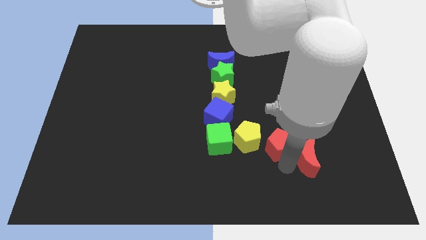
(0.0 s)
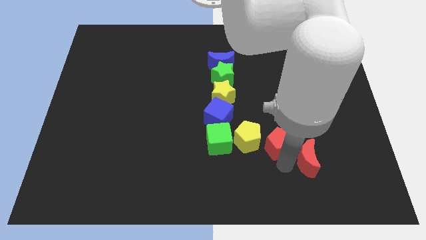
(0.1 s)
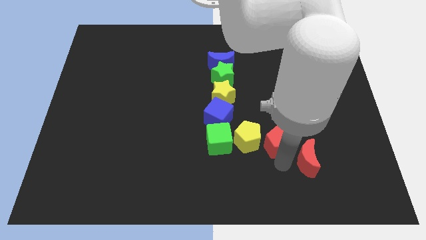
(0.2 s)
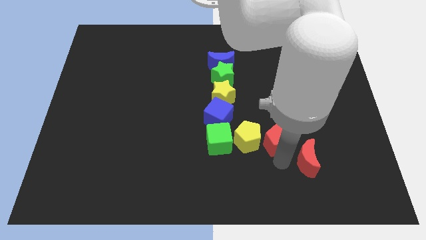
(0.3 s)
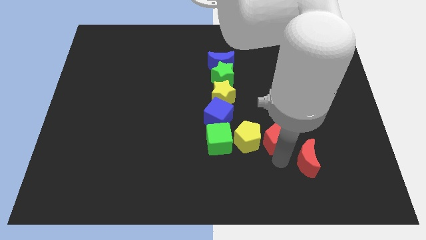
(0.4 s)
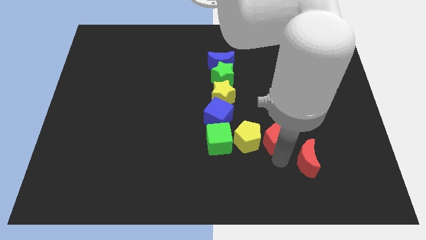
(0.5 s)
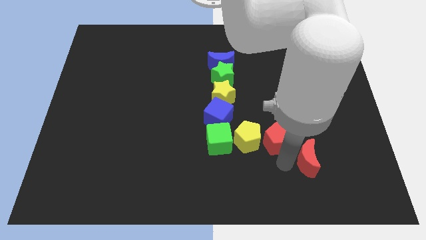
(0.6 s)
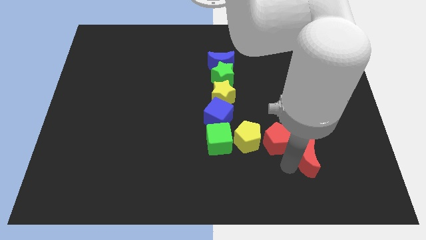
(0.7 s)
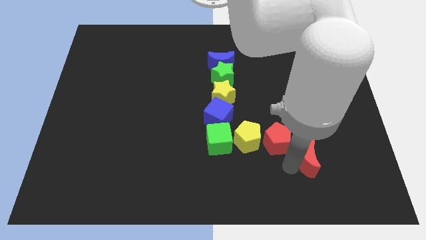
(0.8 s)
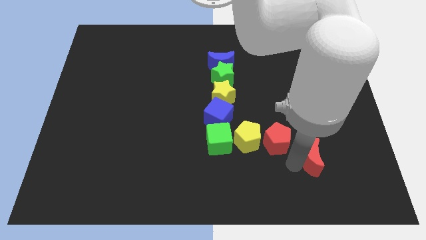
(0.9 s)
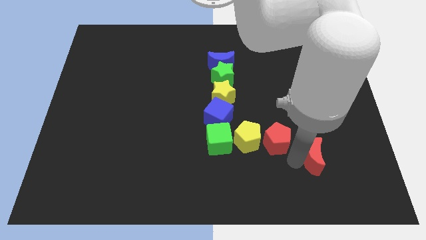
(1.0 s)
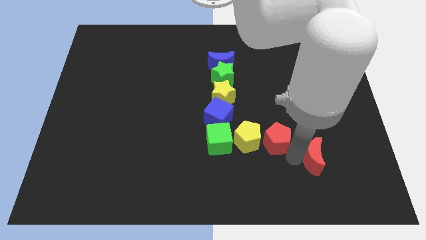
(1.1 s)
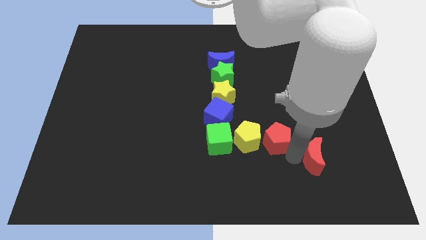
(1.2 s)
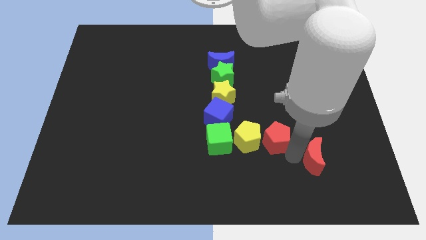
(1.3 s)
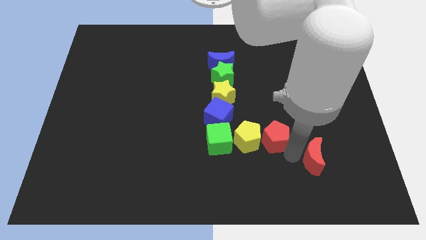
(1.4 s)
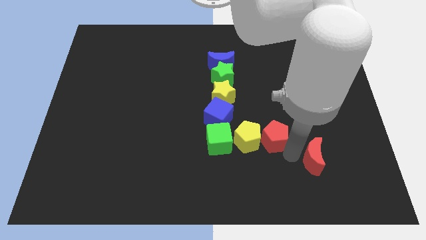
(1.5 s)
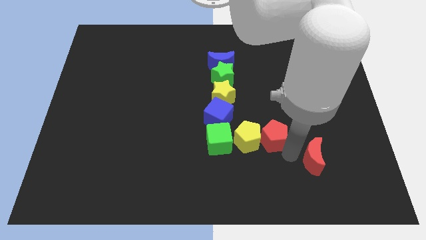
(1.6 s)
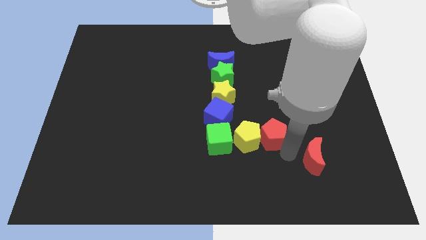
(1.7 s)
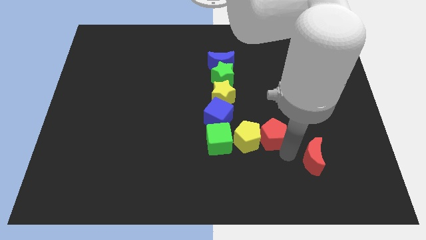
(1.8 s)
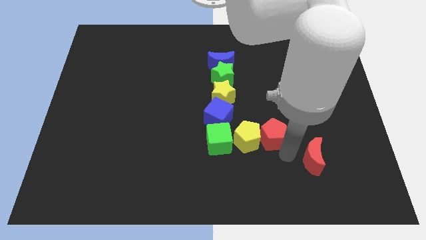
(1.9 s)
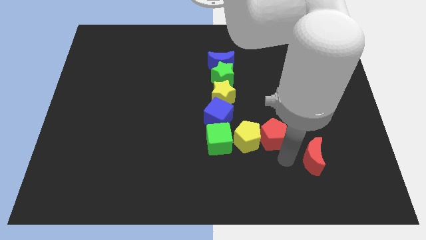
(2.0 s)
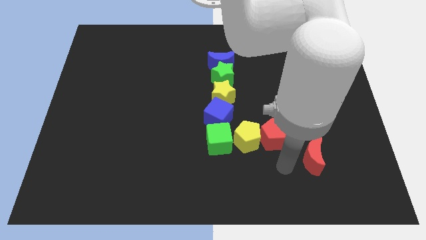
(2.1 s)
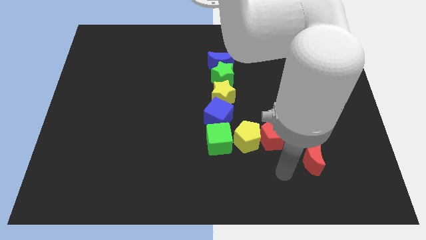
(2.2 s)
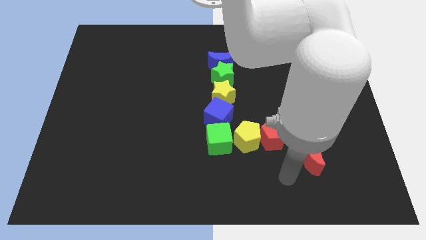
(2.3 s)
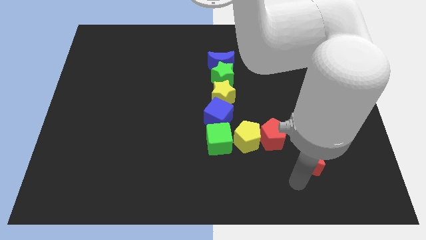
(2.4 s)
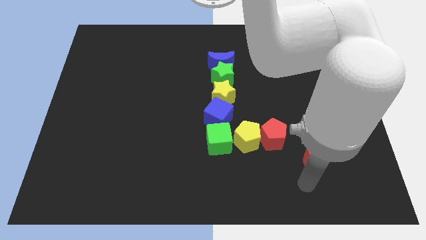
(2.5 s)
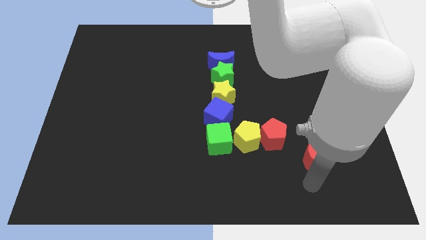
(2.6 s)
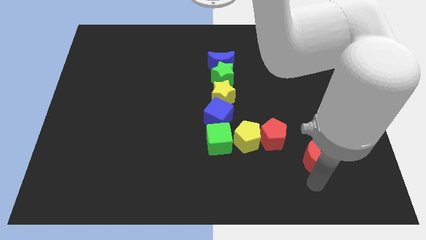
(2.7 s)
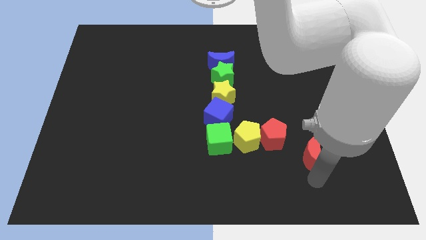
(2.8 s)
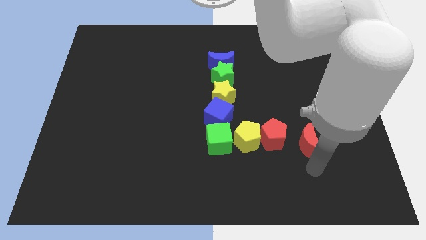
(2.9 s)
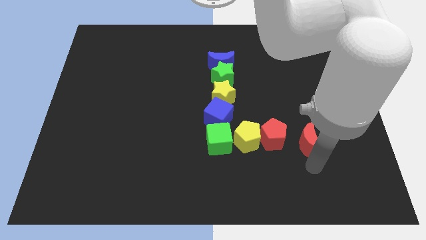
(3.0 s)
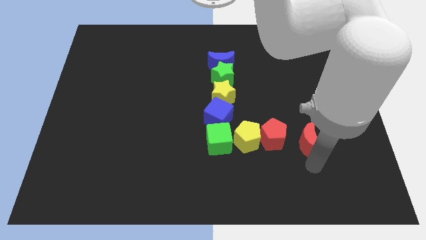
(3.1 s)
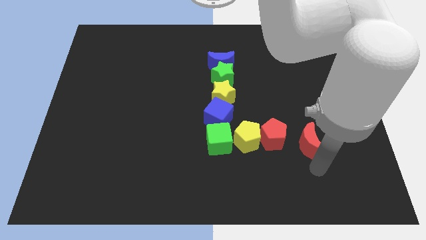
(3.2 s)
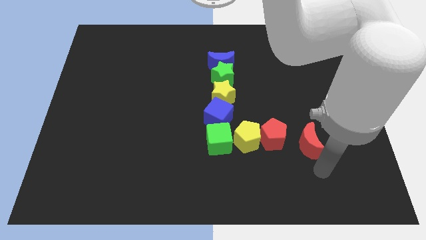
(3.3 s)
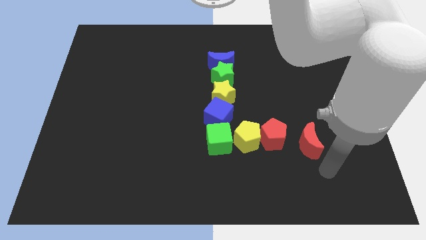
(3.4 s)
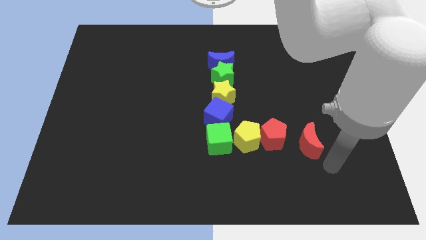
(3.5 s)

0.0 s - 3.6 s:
slide the red pentagon close to yellow pentagon

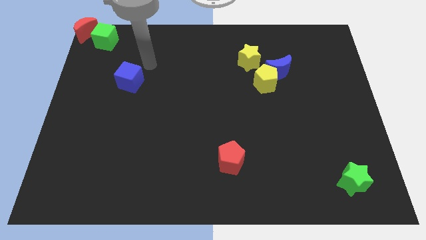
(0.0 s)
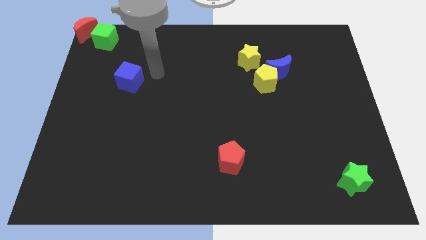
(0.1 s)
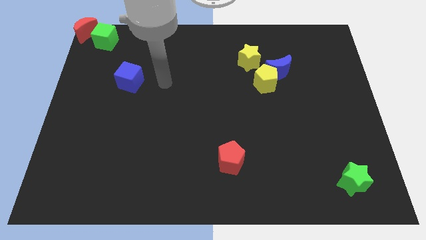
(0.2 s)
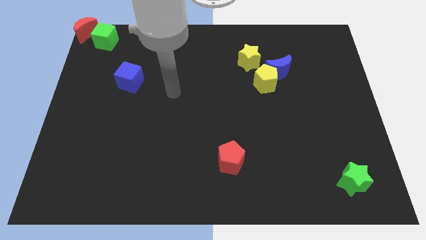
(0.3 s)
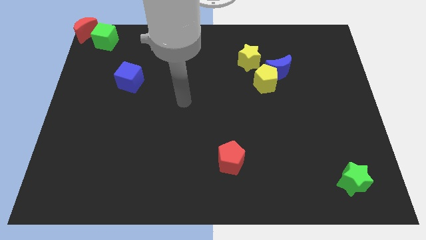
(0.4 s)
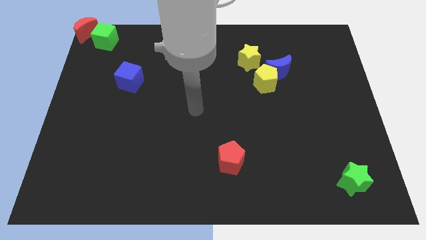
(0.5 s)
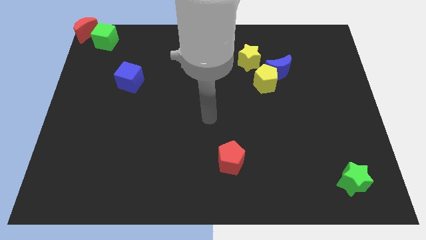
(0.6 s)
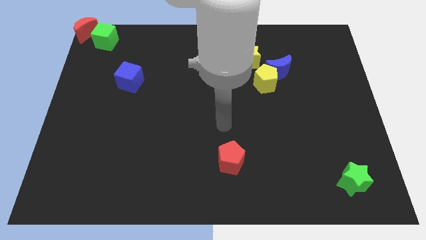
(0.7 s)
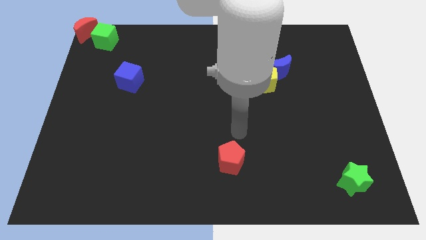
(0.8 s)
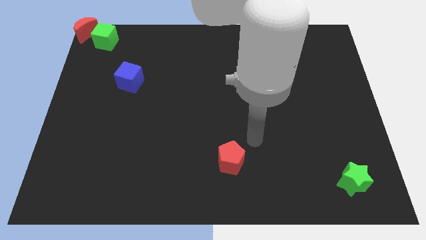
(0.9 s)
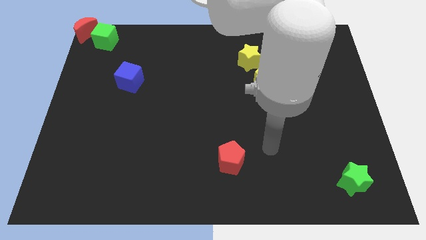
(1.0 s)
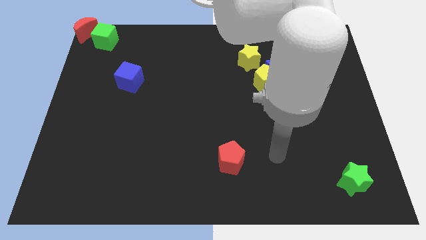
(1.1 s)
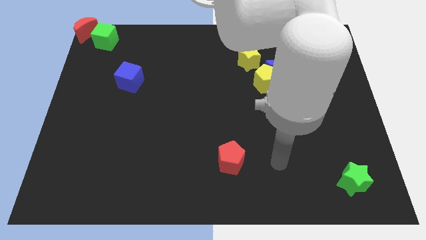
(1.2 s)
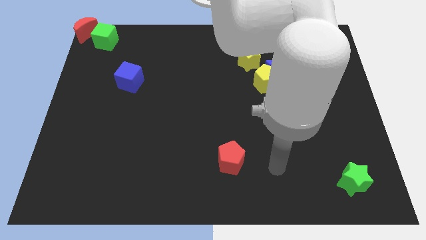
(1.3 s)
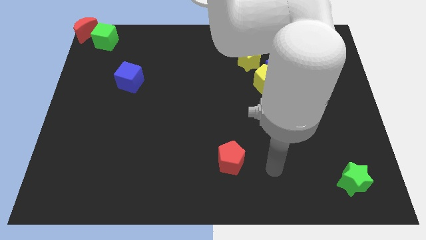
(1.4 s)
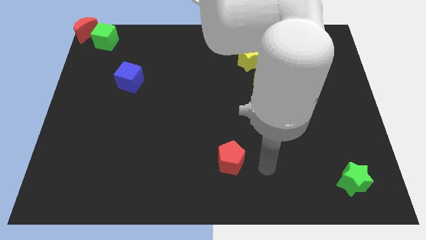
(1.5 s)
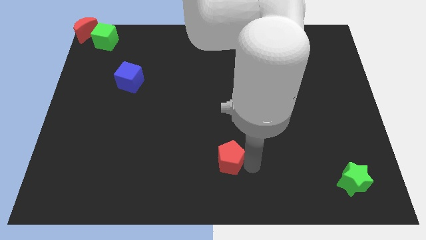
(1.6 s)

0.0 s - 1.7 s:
point your hand at the right side of the red pentagon

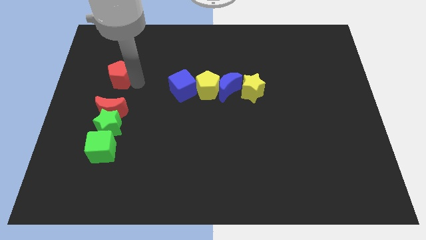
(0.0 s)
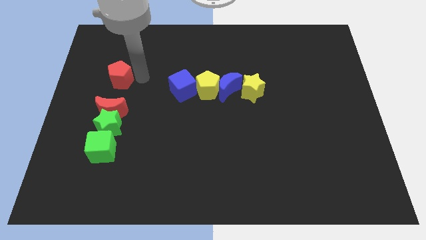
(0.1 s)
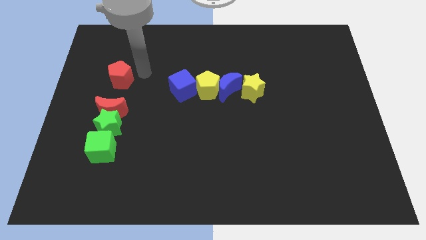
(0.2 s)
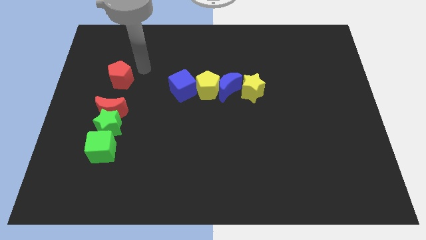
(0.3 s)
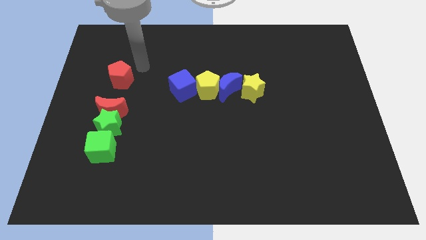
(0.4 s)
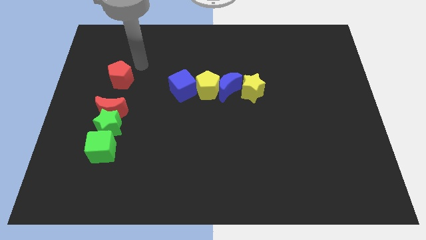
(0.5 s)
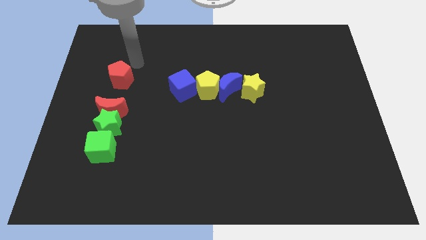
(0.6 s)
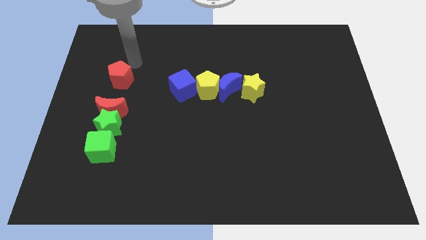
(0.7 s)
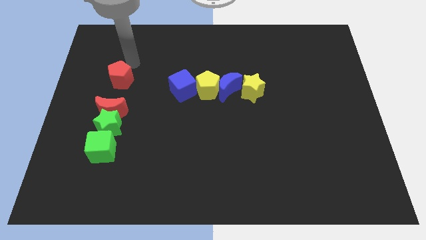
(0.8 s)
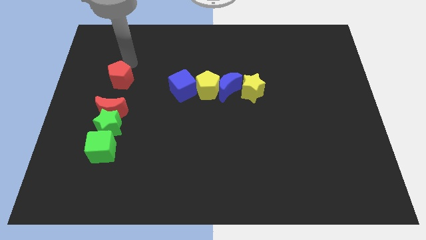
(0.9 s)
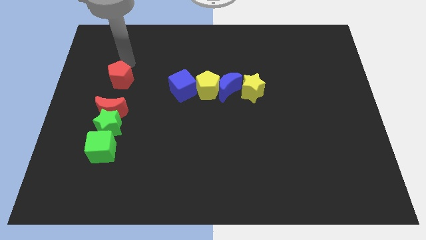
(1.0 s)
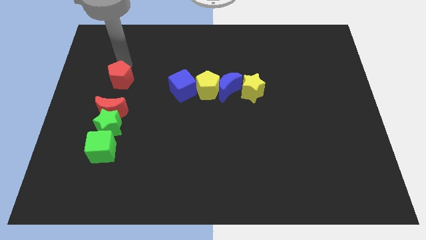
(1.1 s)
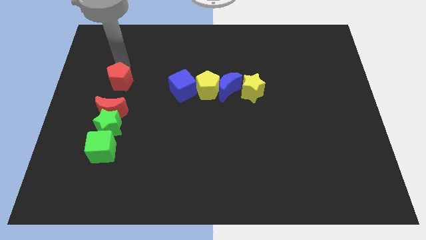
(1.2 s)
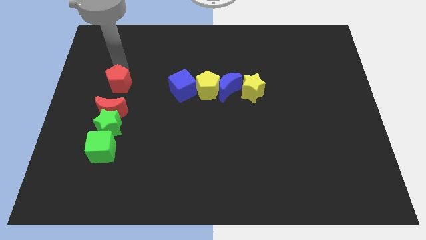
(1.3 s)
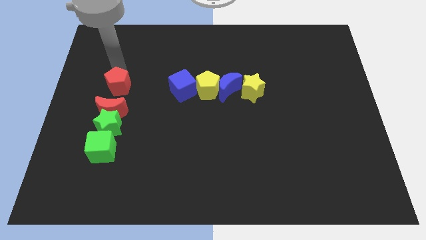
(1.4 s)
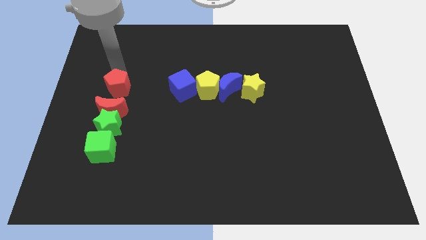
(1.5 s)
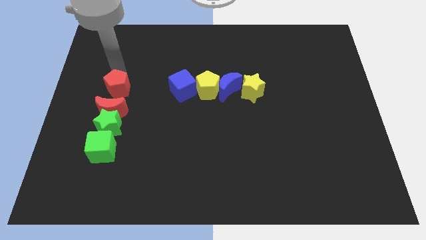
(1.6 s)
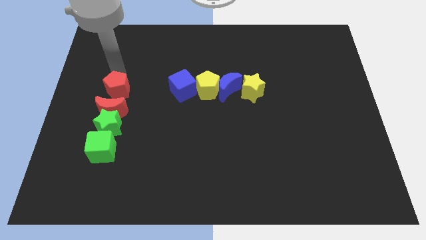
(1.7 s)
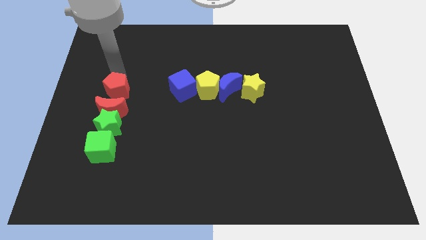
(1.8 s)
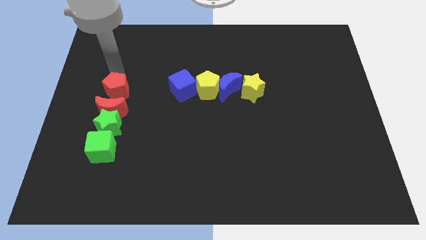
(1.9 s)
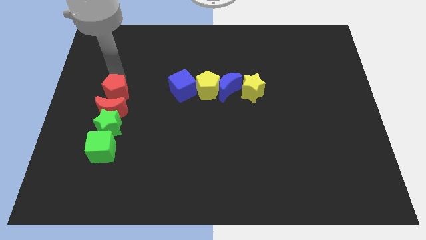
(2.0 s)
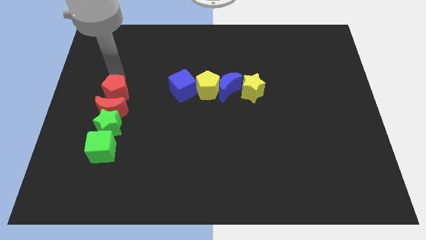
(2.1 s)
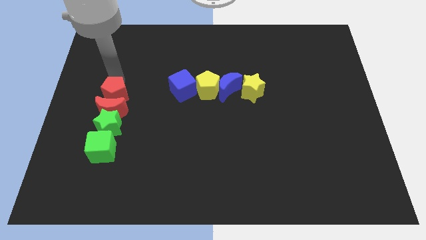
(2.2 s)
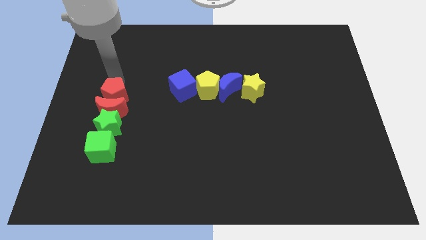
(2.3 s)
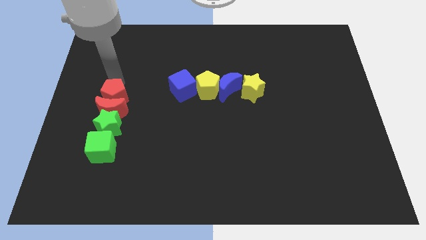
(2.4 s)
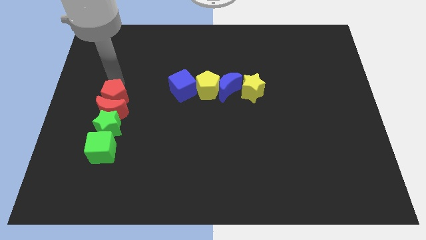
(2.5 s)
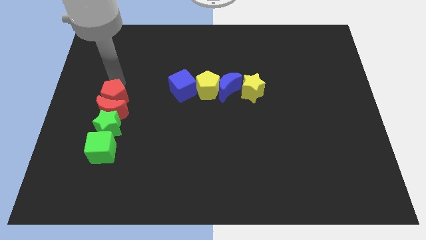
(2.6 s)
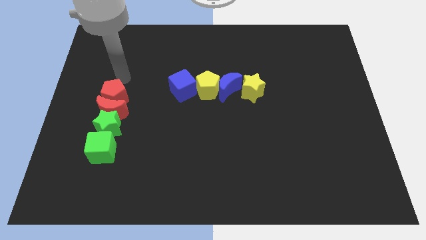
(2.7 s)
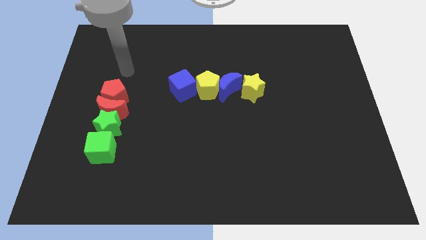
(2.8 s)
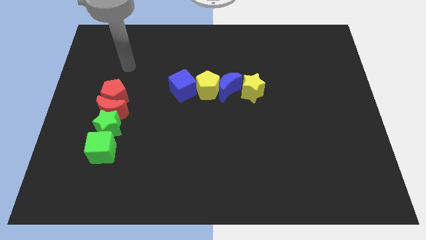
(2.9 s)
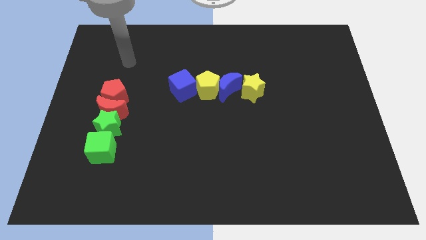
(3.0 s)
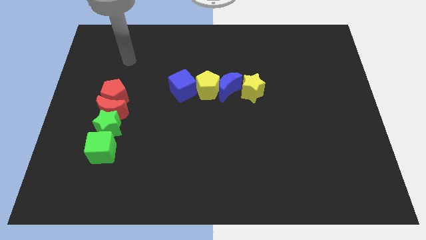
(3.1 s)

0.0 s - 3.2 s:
put your arm above the red pentagon

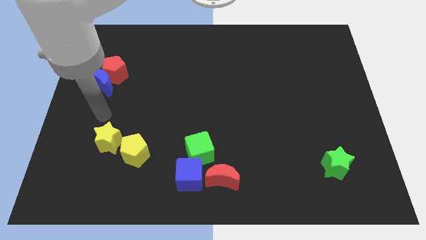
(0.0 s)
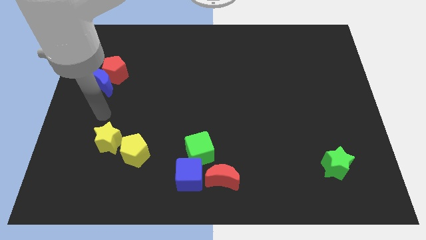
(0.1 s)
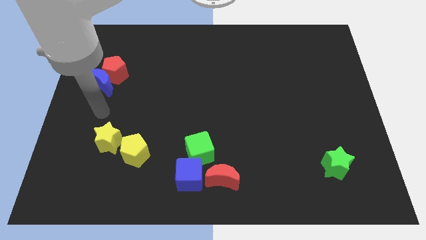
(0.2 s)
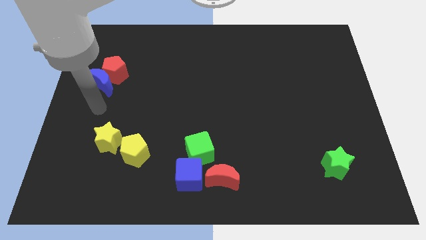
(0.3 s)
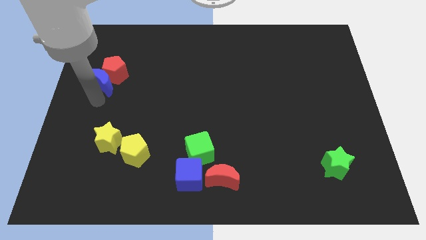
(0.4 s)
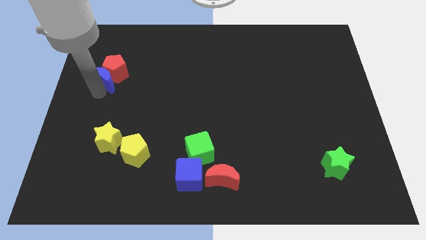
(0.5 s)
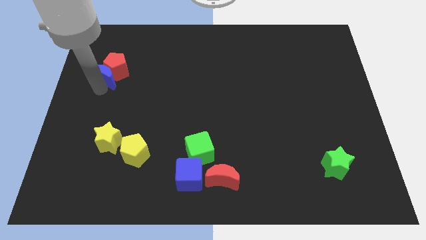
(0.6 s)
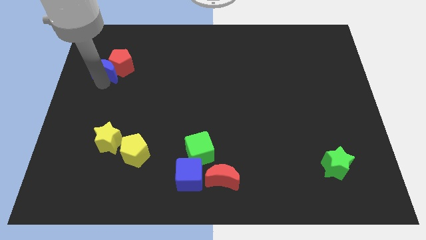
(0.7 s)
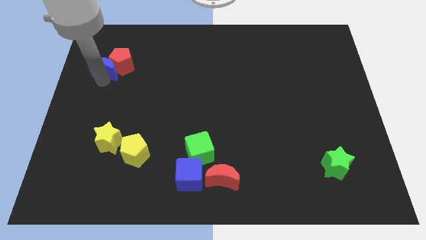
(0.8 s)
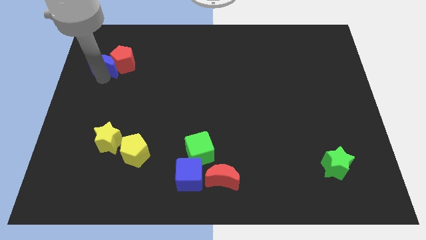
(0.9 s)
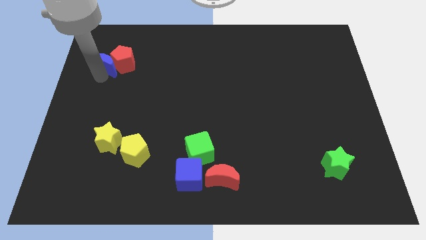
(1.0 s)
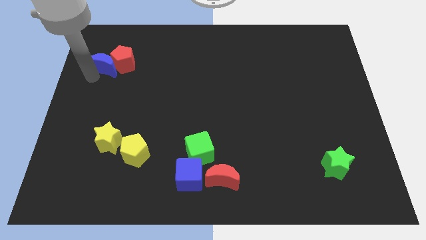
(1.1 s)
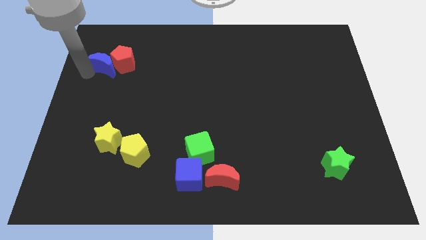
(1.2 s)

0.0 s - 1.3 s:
push the red pentagon with the blue moon
